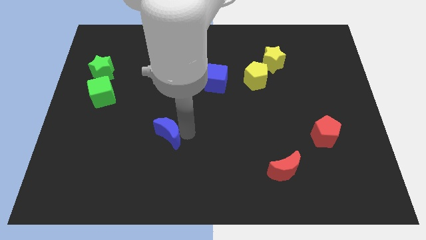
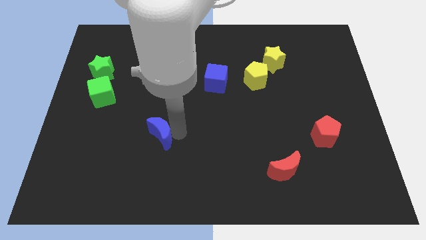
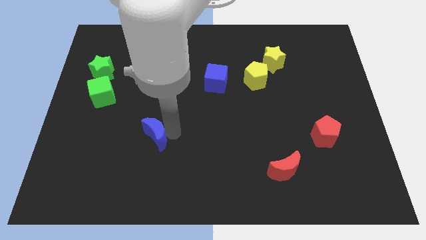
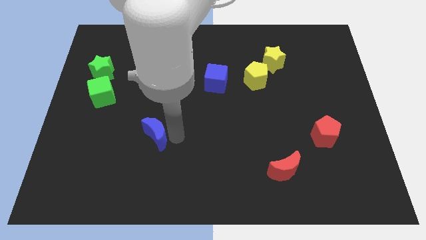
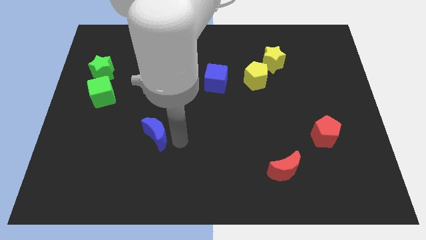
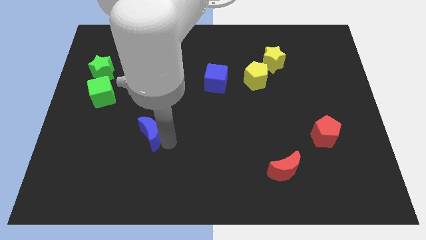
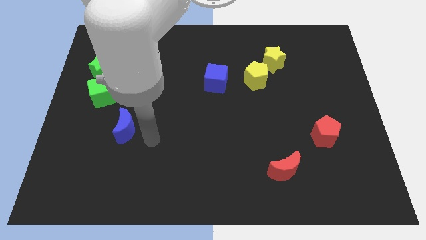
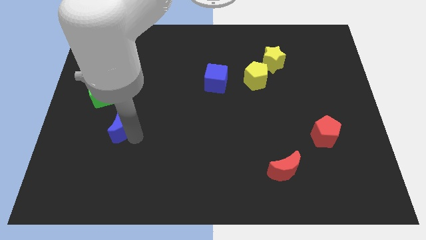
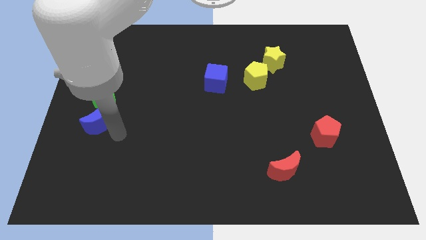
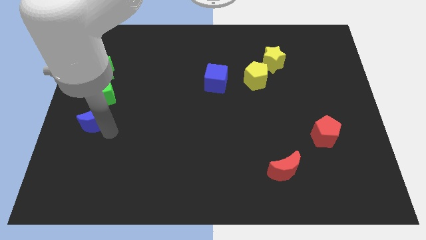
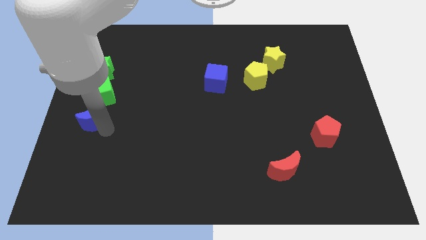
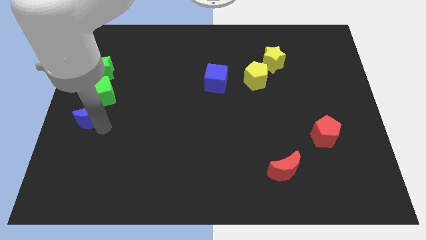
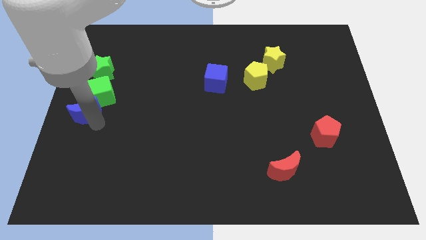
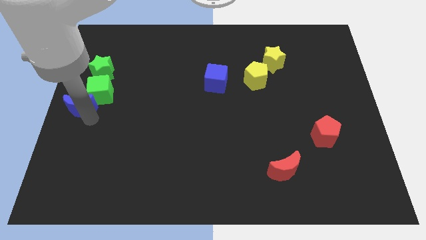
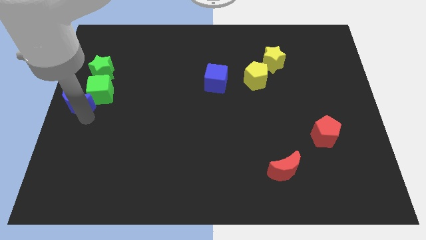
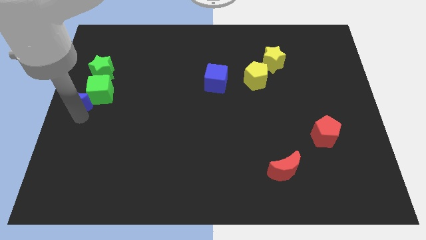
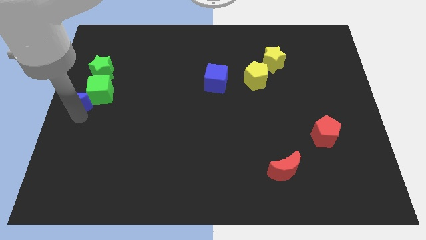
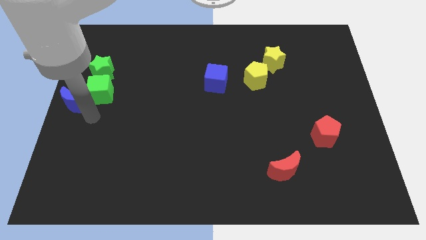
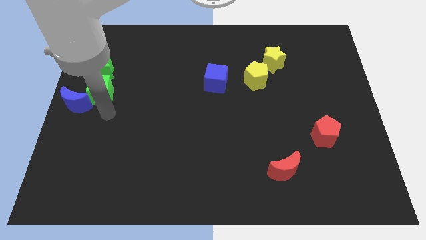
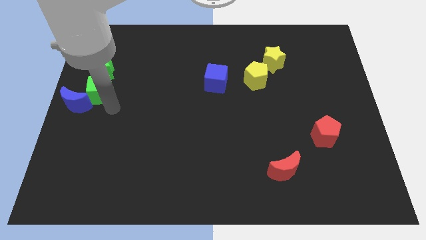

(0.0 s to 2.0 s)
move the blue moon at the bottom left of the green cube

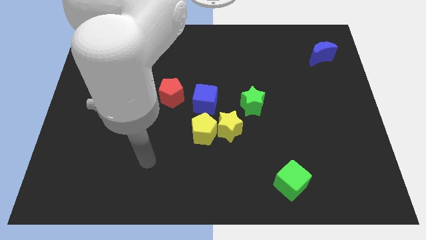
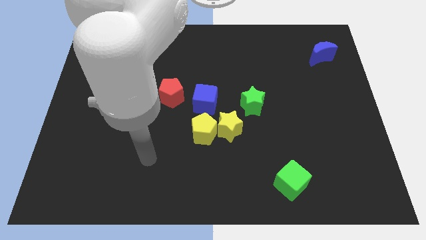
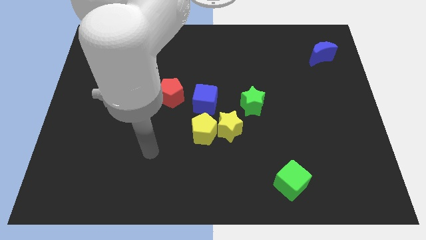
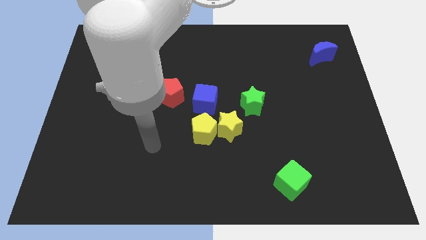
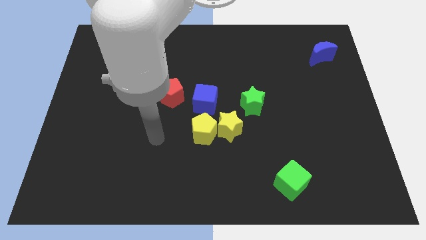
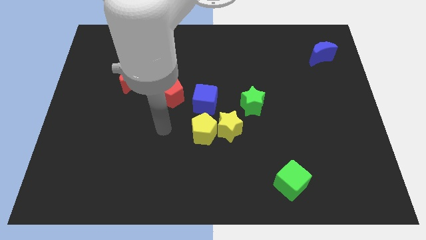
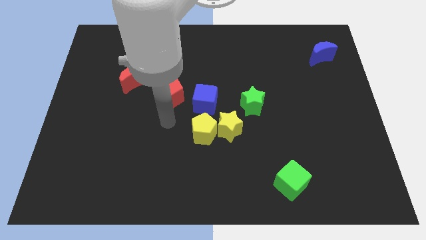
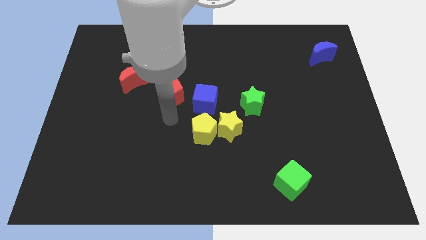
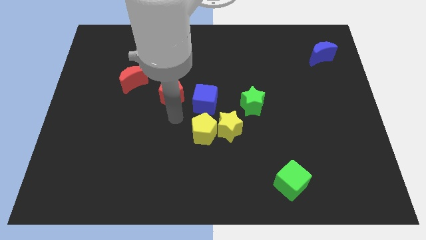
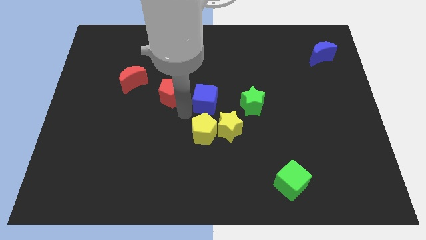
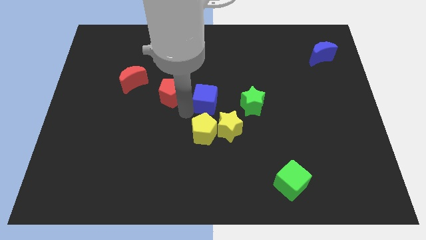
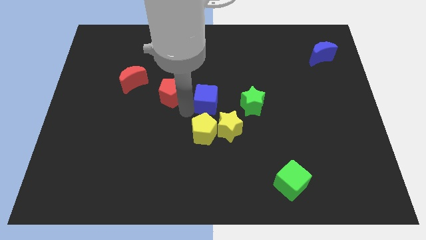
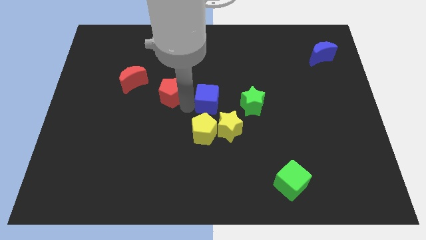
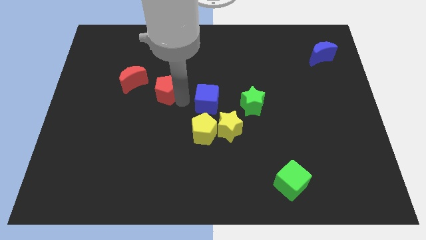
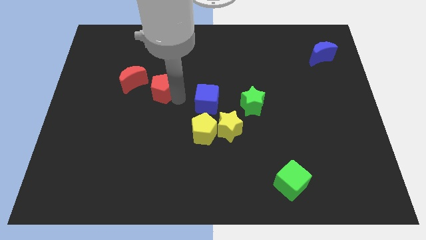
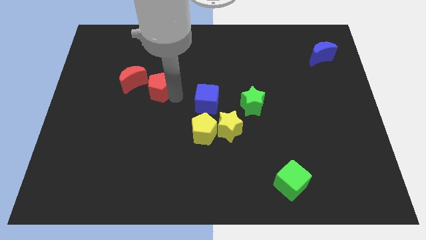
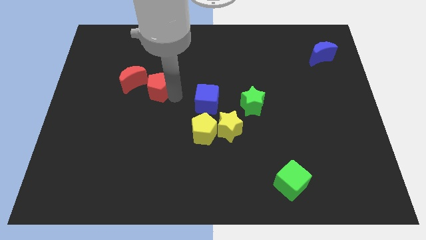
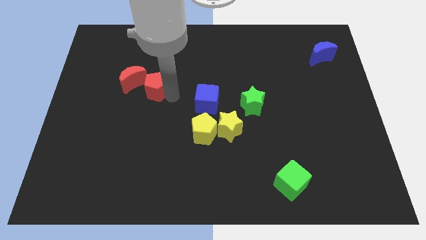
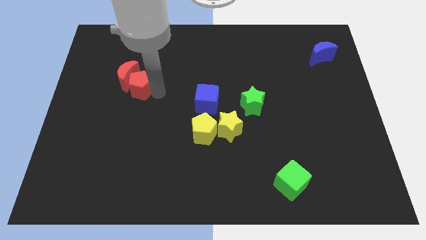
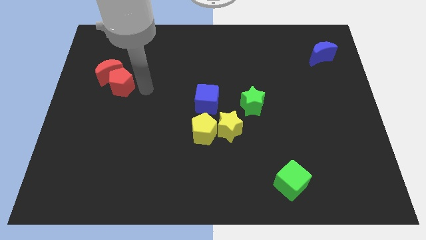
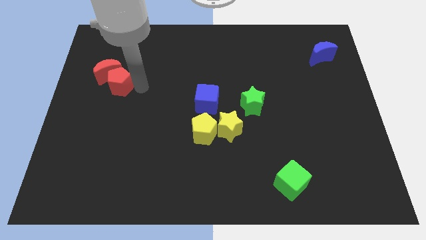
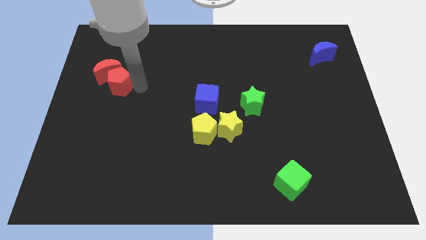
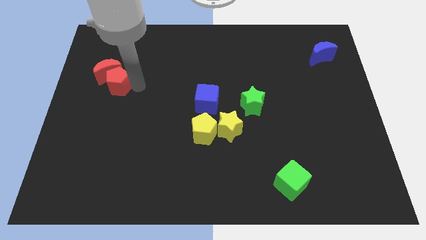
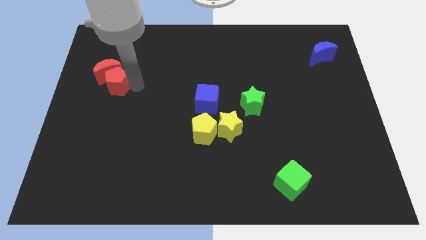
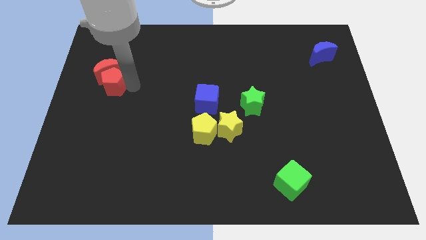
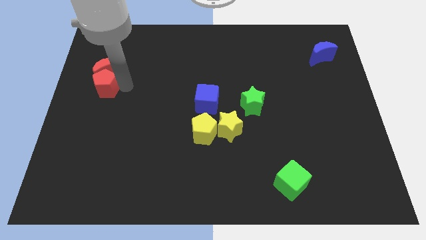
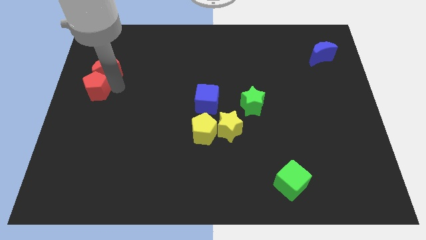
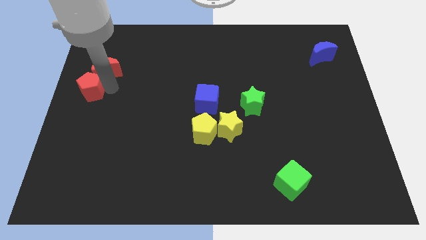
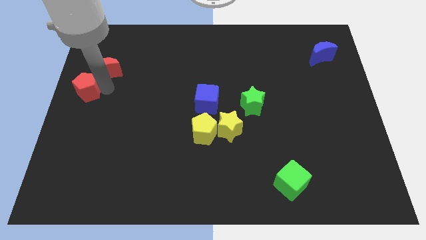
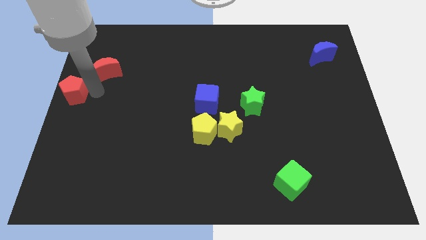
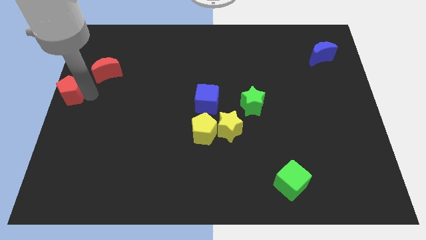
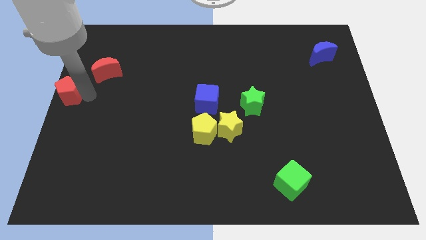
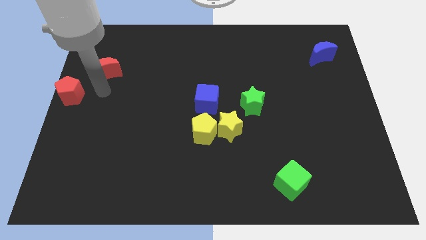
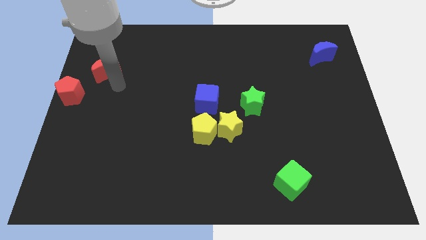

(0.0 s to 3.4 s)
push the red pentagon to the center left of the board

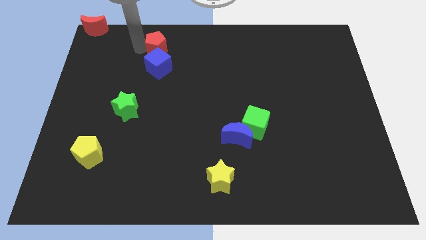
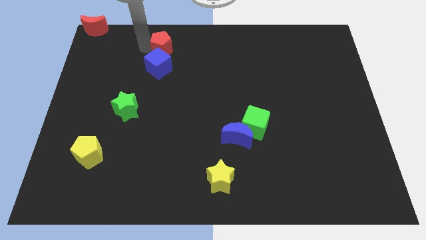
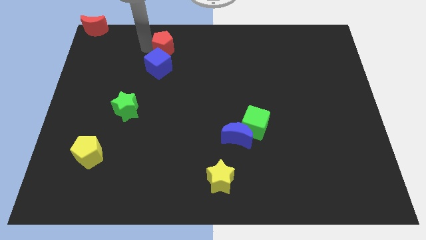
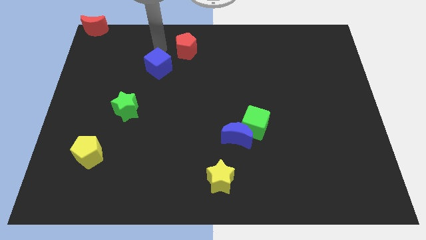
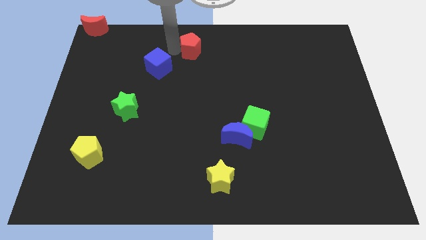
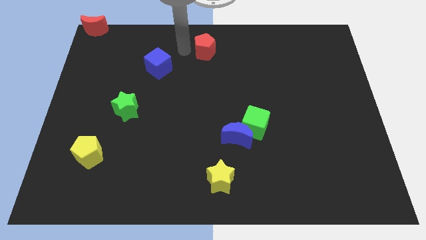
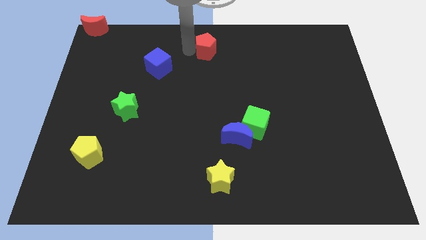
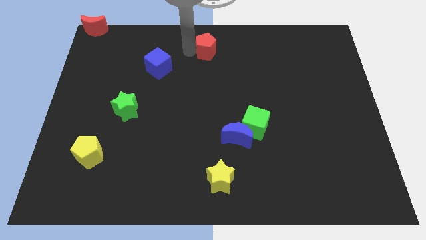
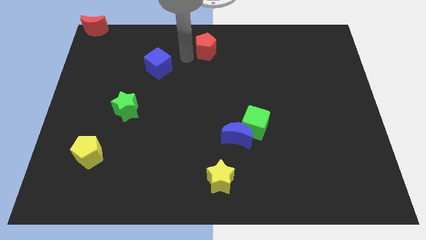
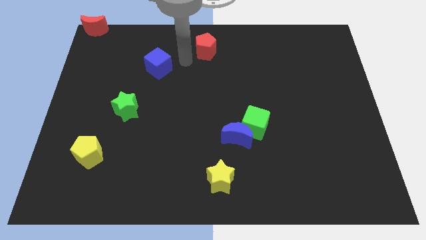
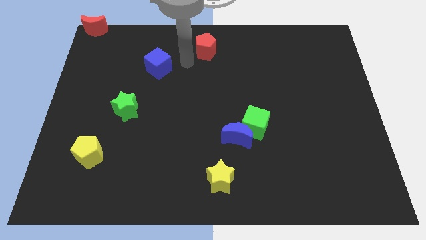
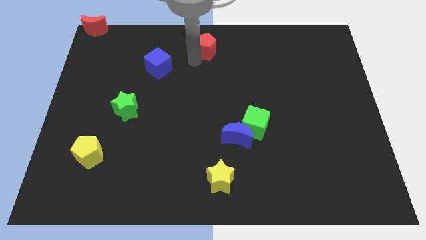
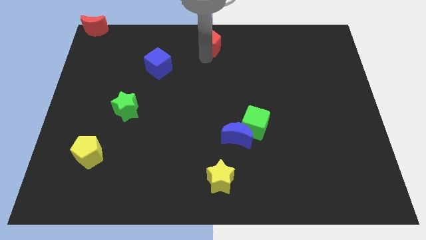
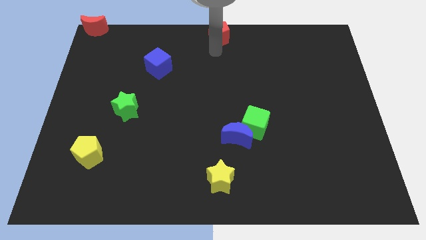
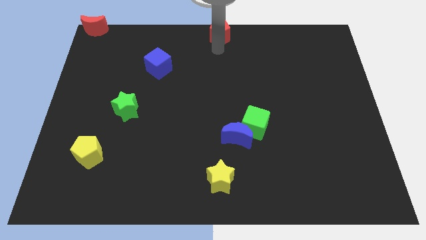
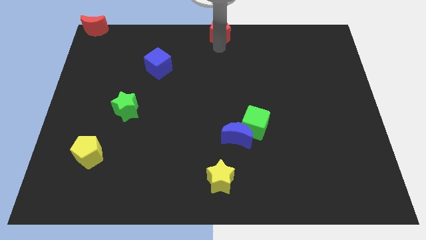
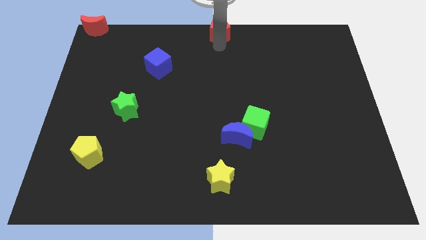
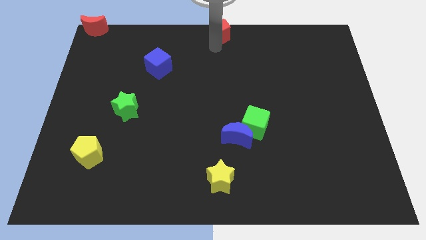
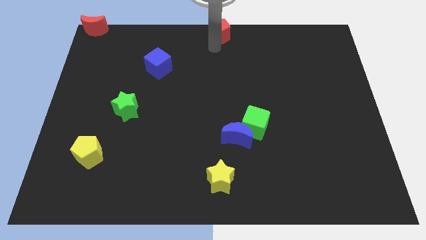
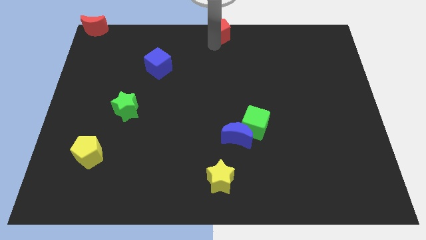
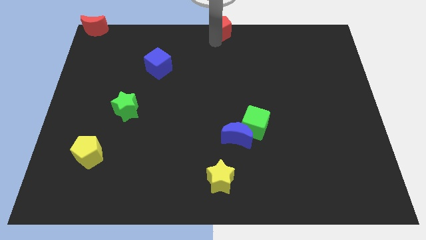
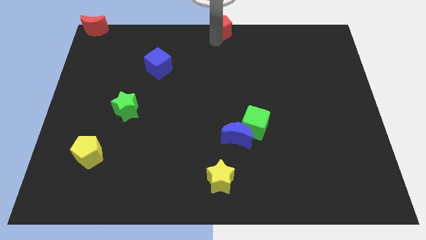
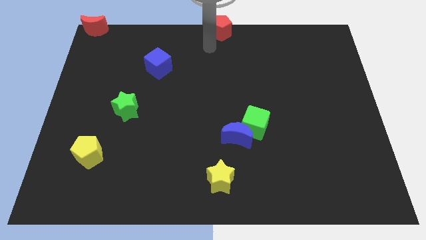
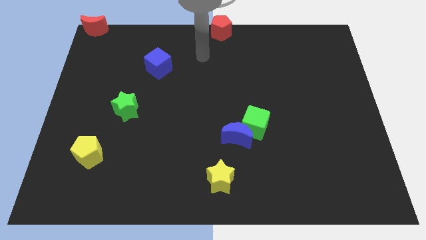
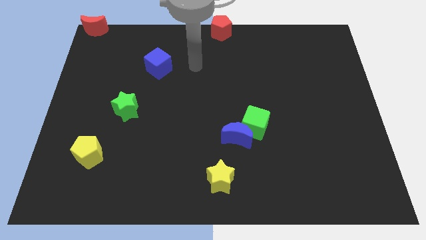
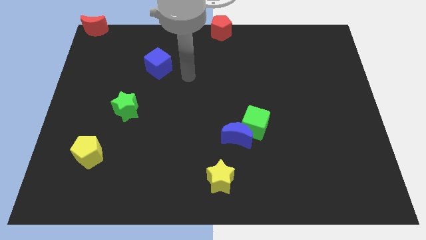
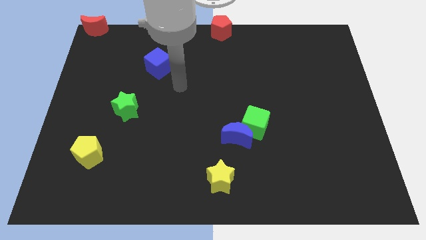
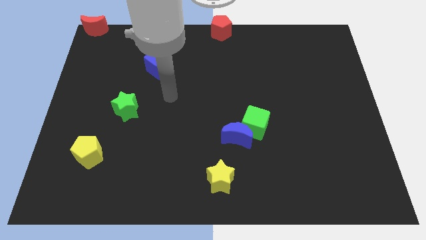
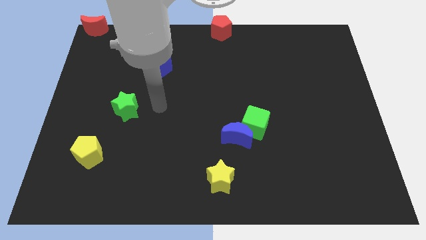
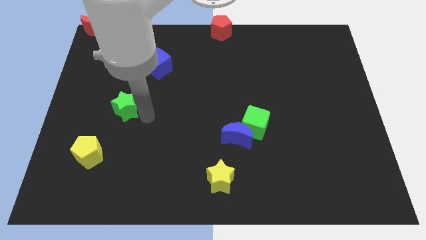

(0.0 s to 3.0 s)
place red pentagon to the top center

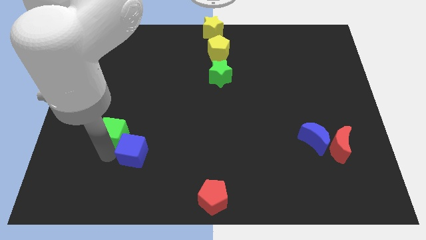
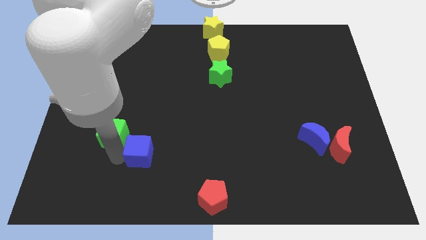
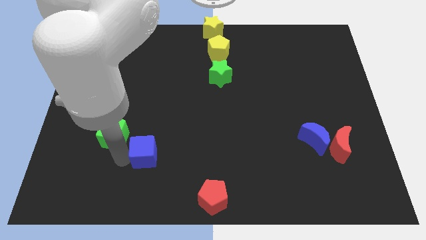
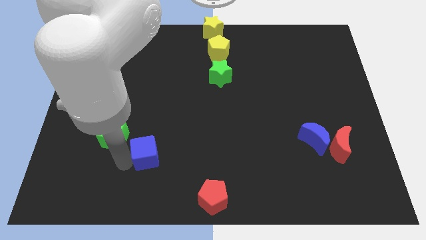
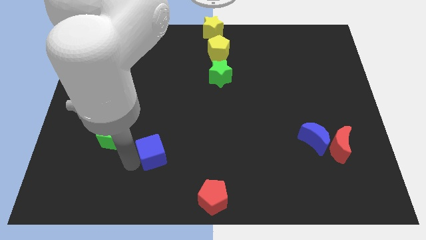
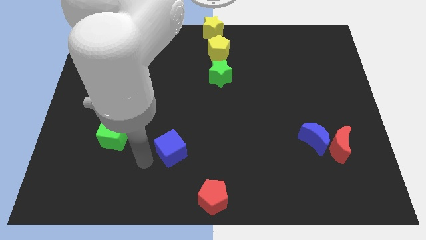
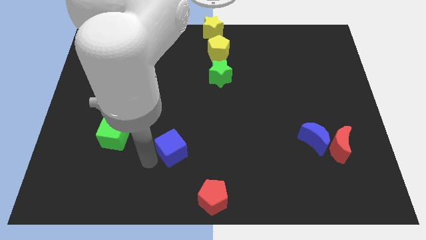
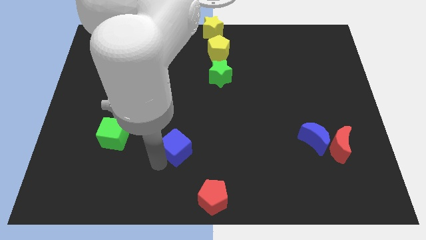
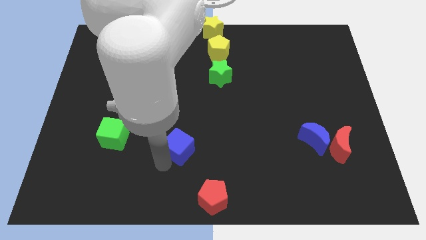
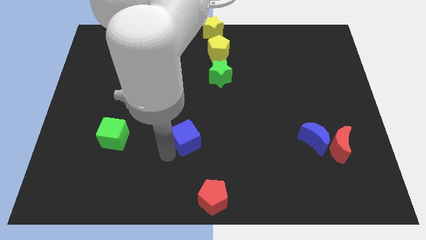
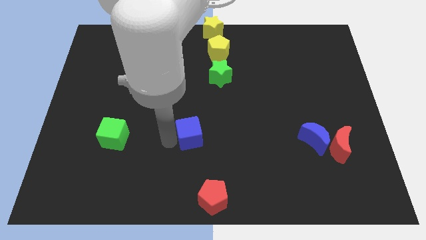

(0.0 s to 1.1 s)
move the blue cube slightly to the center of the board
